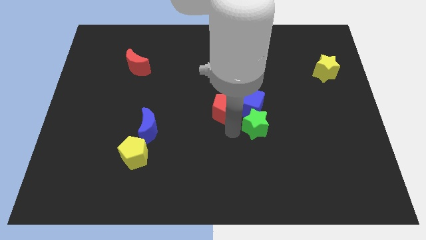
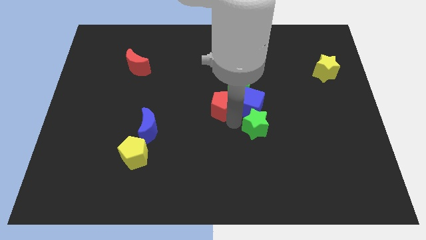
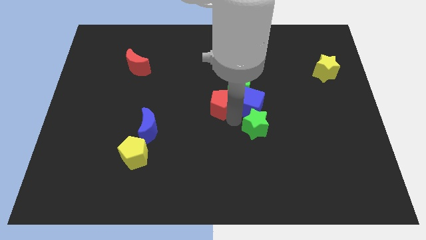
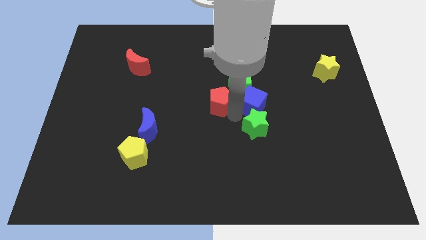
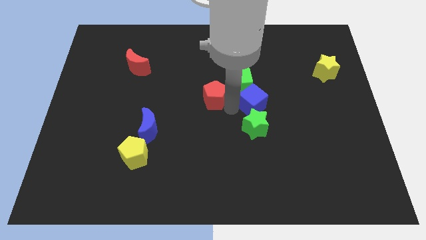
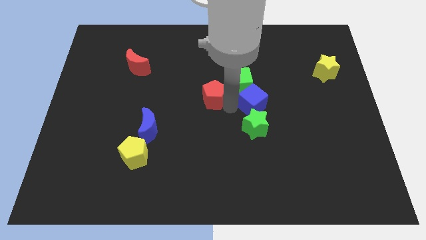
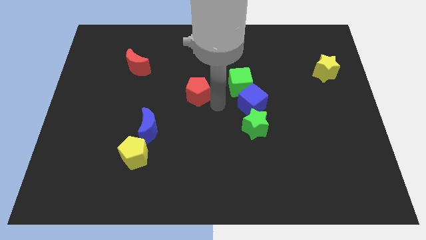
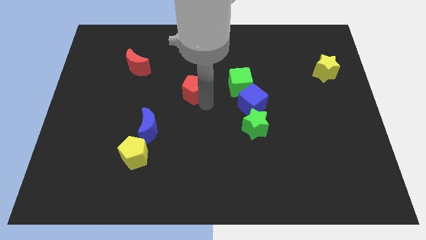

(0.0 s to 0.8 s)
separate red pentagon and blue cube

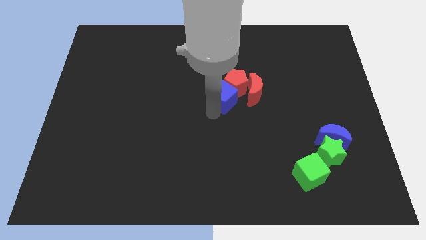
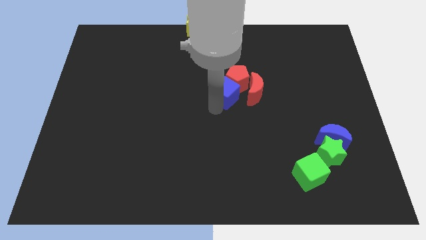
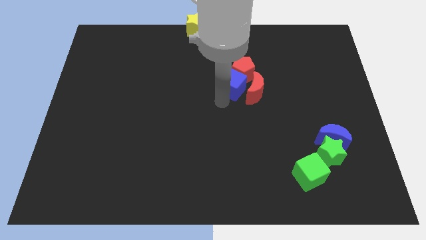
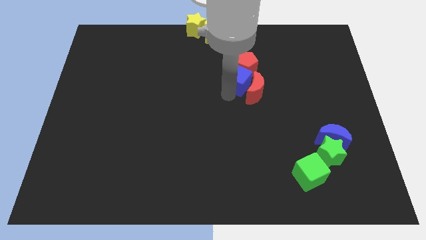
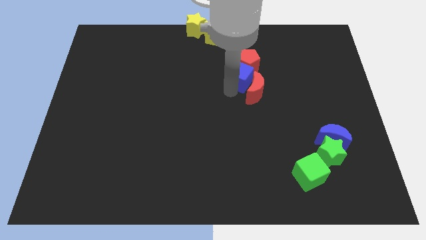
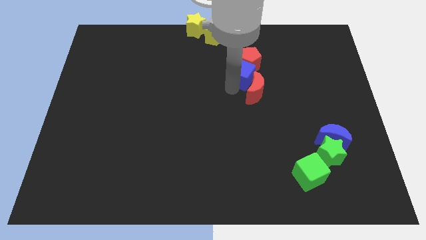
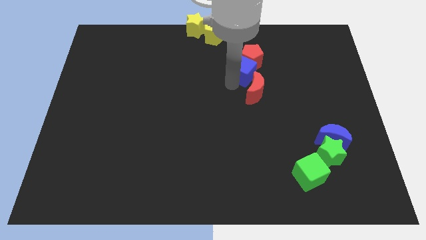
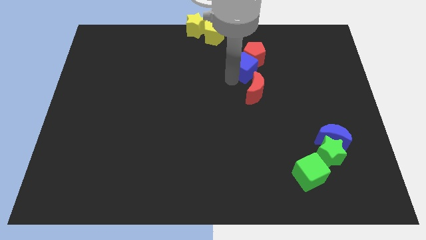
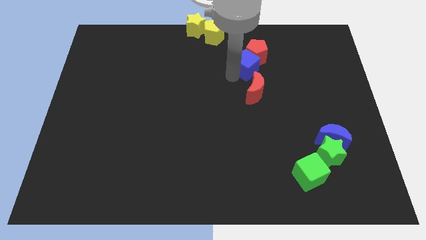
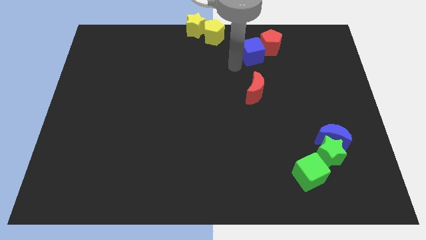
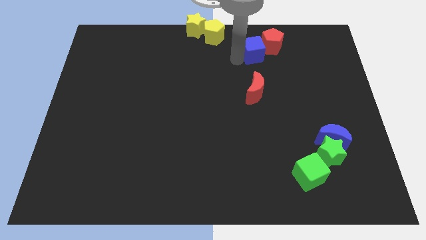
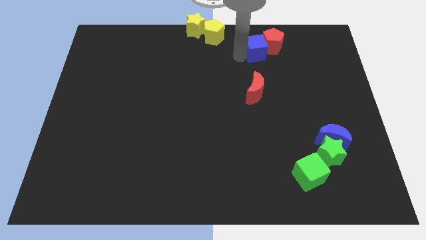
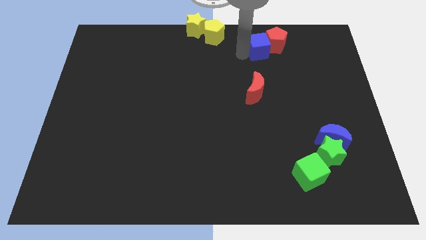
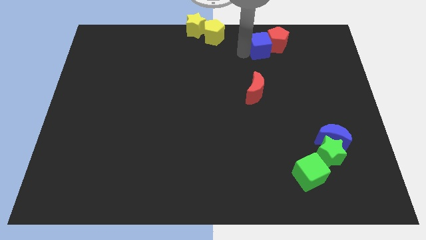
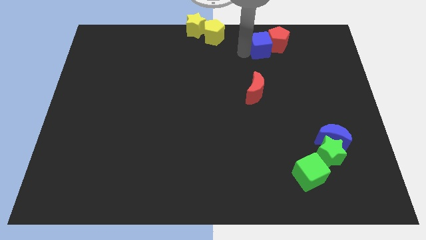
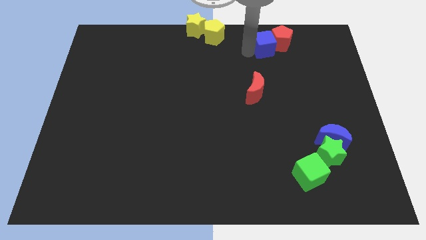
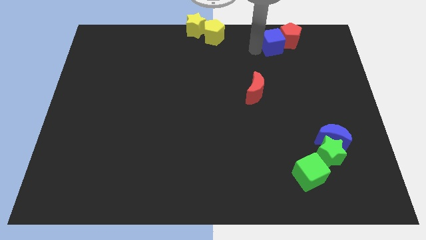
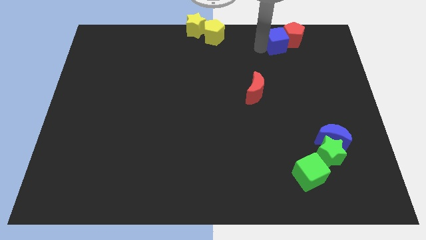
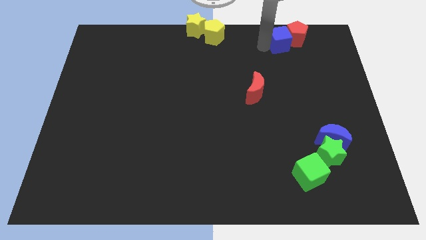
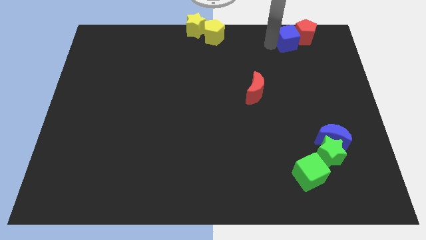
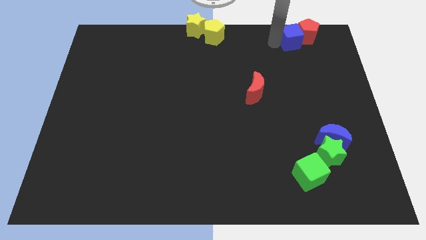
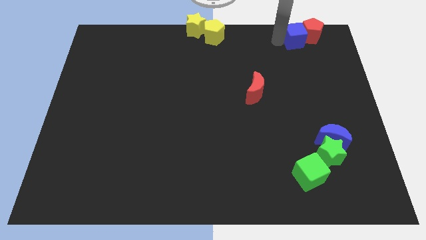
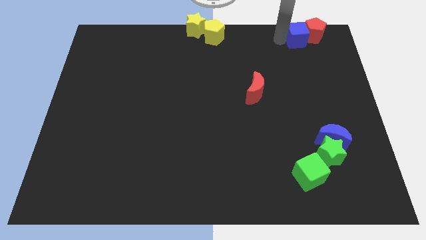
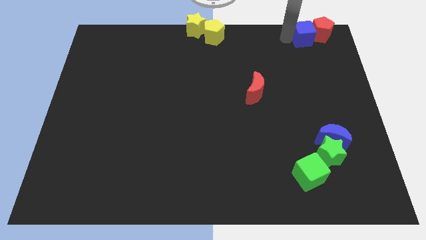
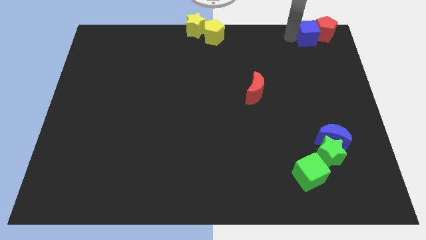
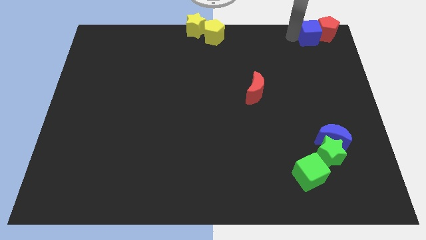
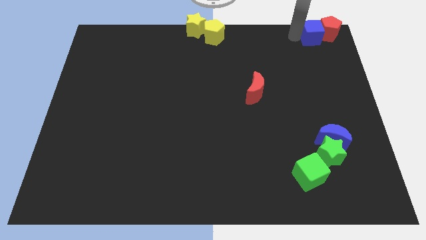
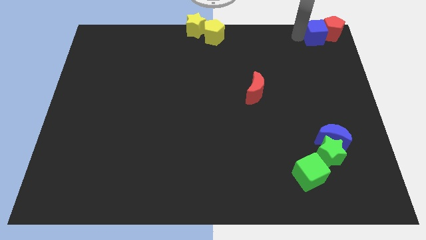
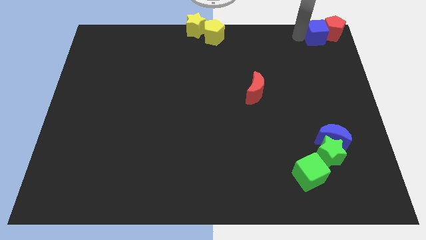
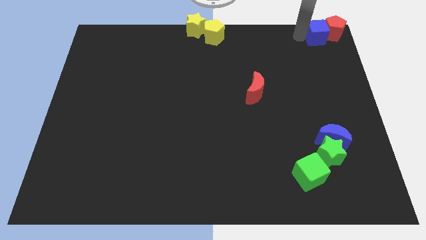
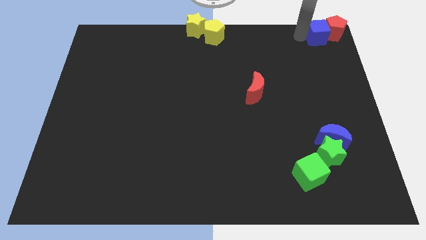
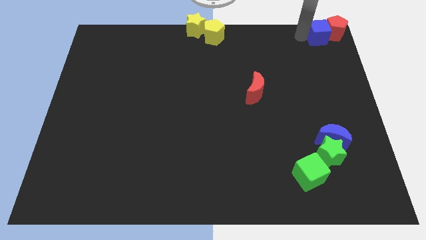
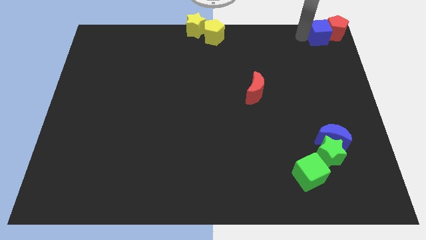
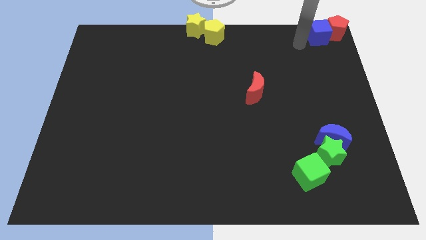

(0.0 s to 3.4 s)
move blue cube along with red pentagon towards top right corner of the board

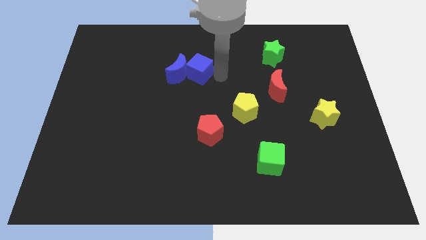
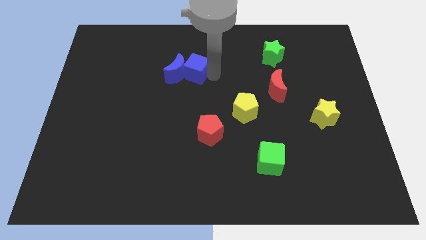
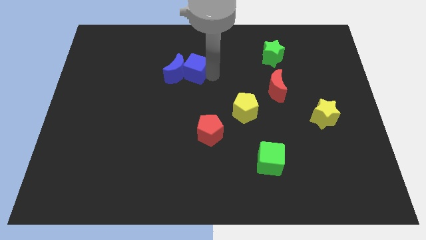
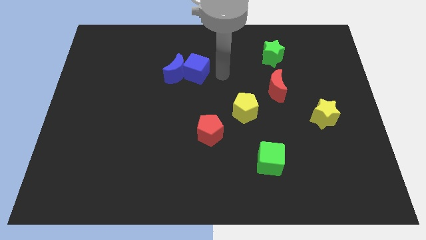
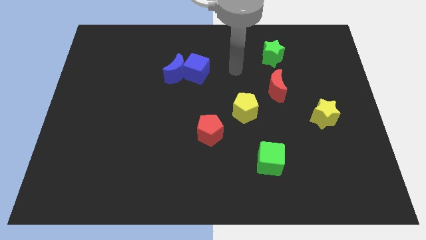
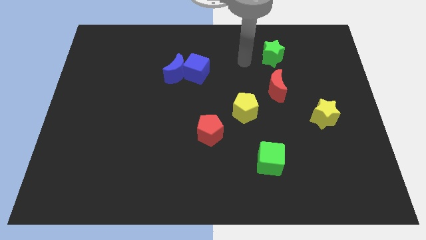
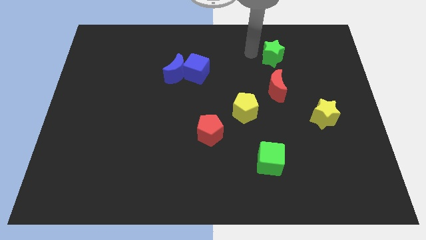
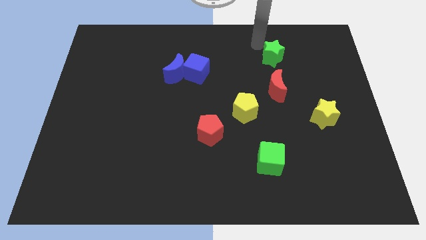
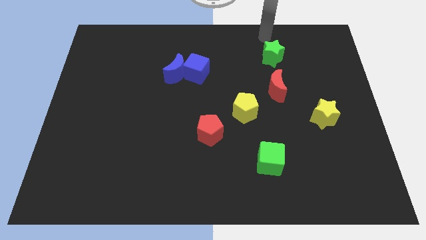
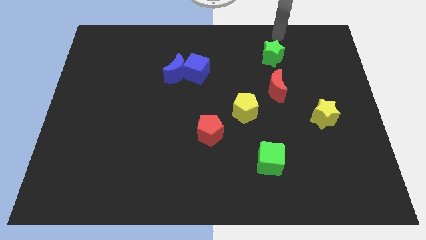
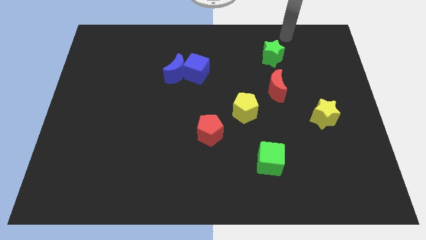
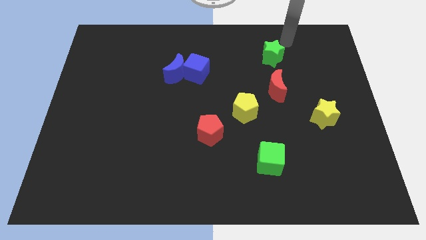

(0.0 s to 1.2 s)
move the arm away from the blue cube

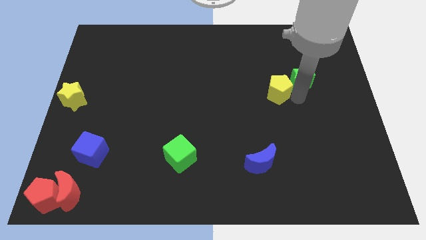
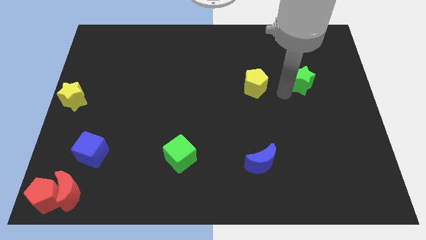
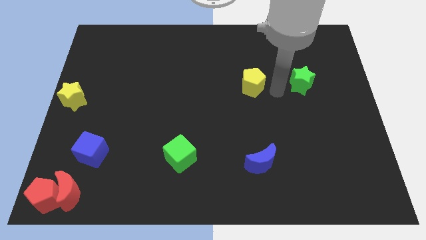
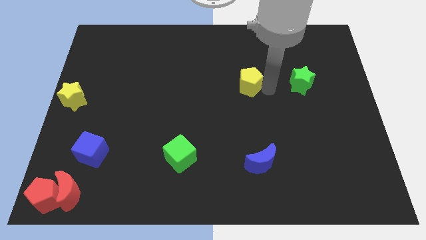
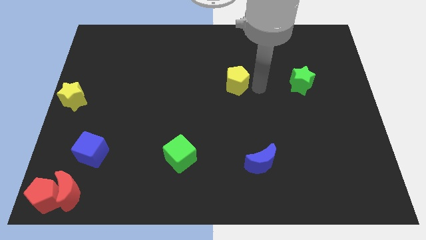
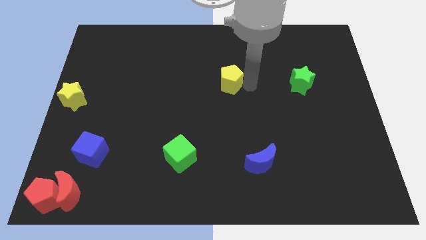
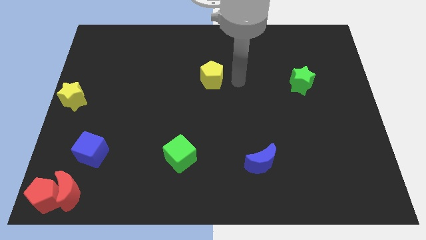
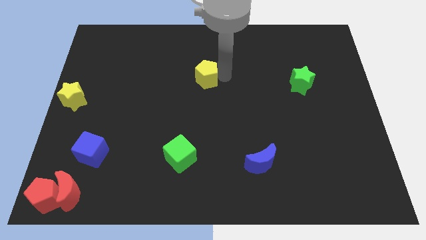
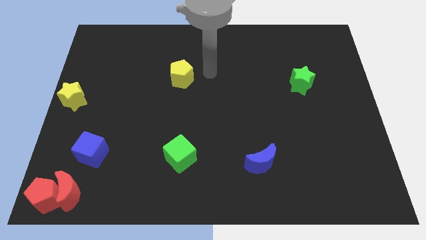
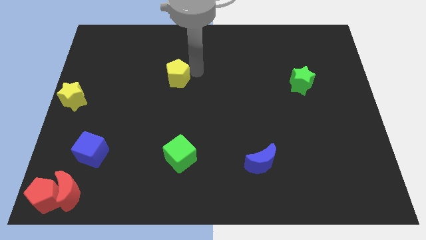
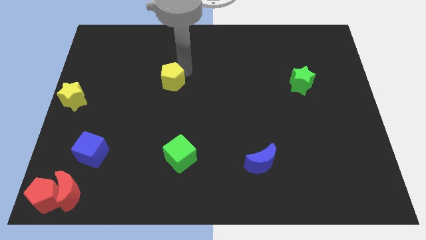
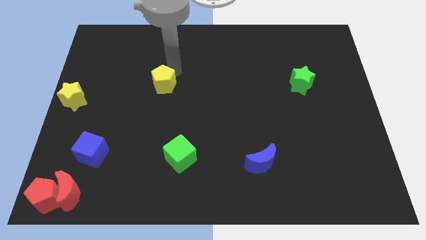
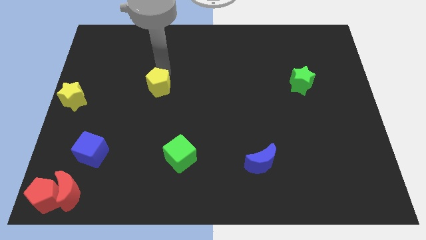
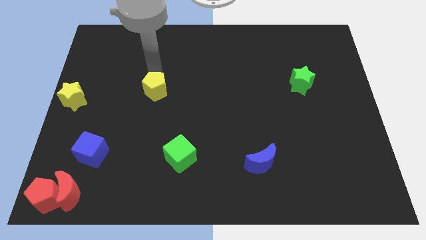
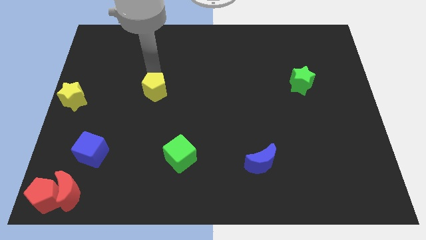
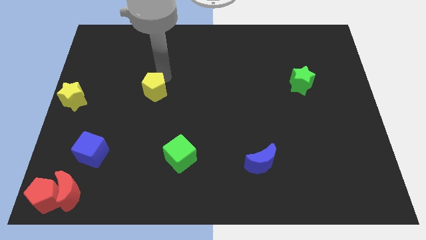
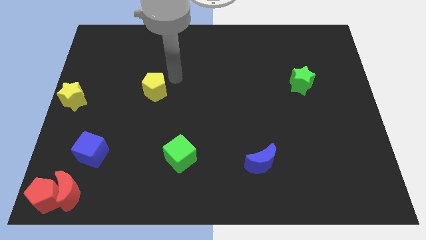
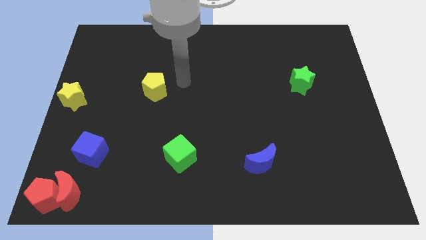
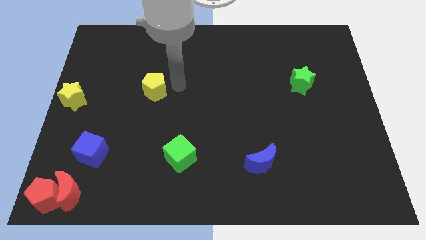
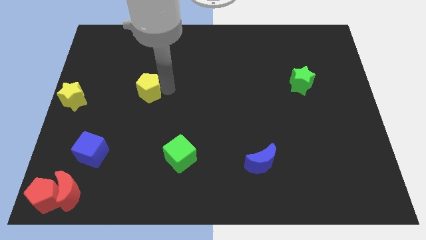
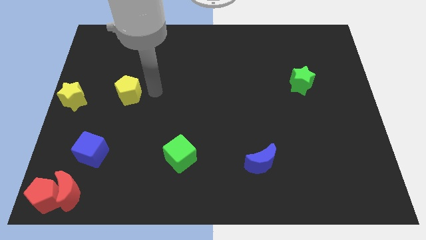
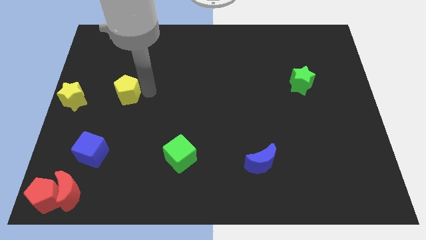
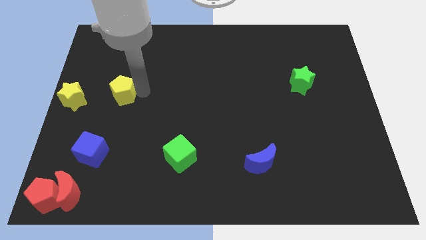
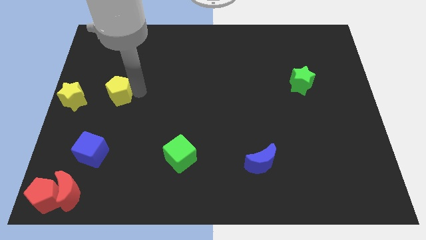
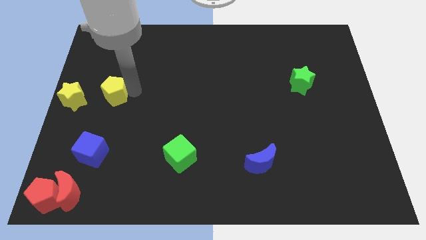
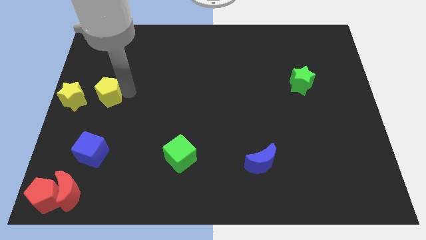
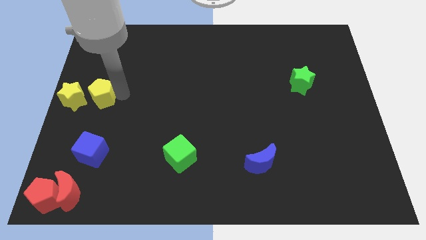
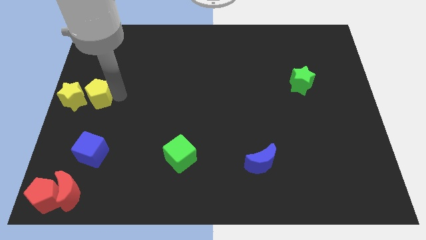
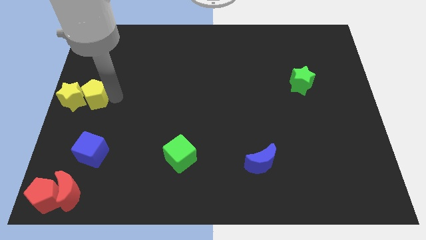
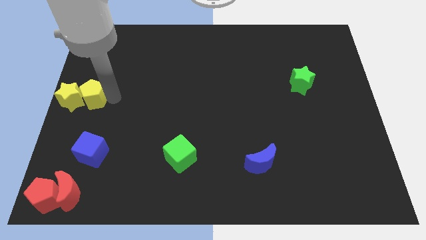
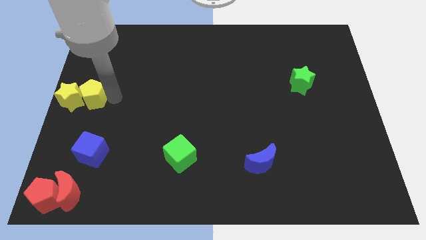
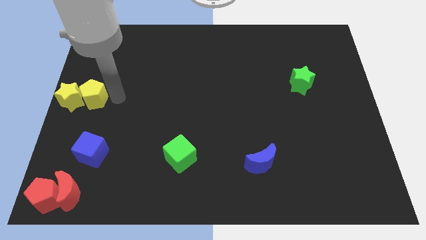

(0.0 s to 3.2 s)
push the yellow pentagon right to the yellow star

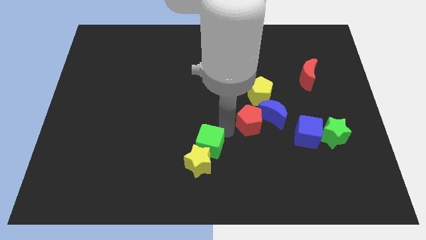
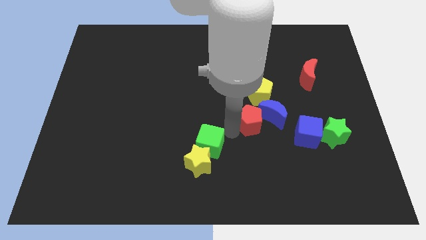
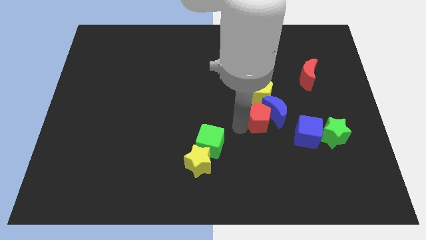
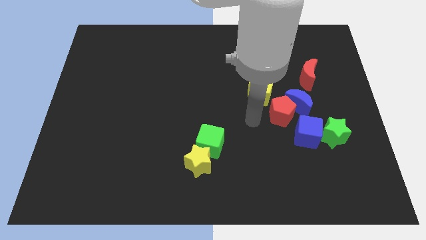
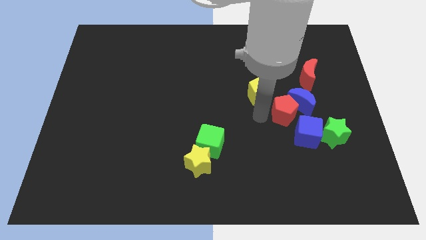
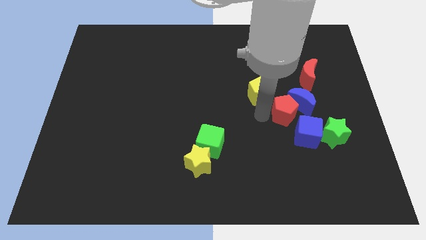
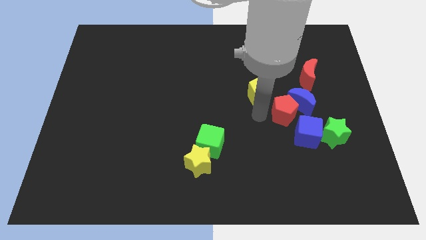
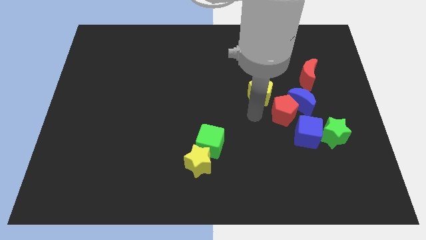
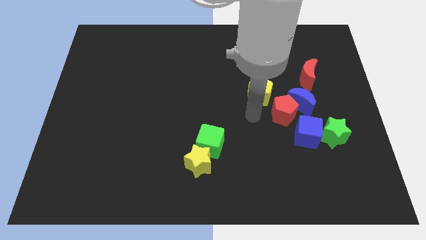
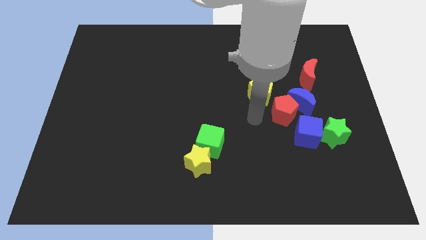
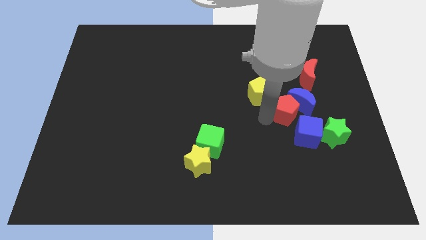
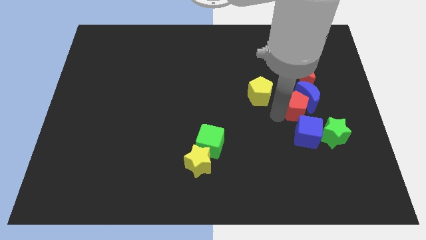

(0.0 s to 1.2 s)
slide red pentagon along with the blue moon towards the center right
